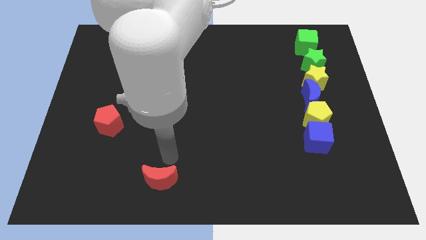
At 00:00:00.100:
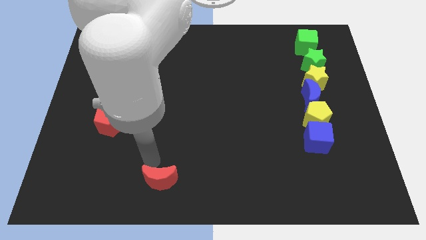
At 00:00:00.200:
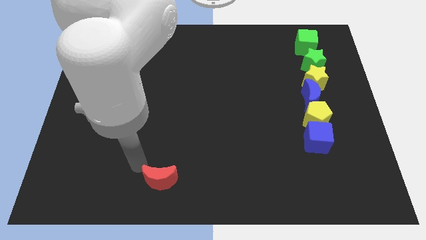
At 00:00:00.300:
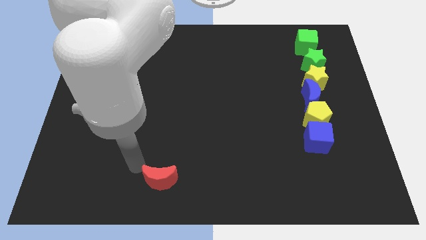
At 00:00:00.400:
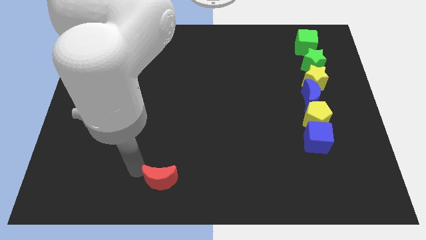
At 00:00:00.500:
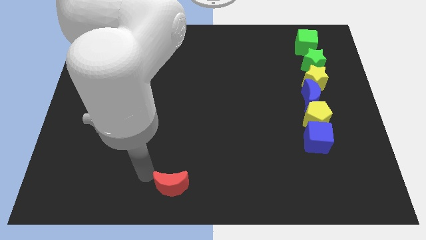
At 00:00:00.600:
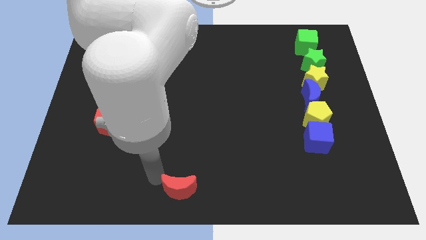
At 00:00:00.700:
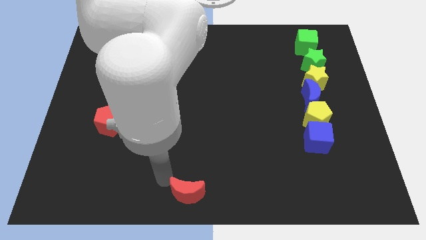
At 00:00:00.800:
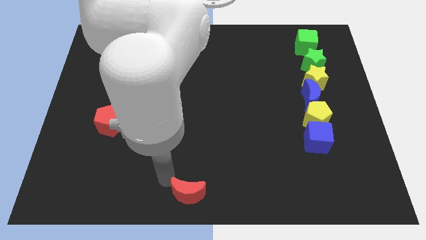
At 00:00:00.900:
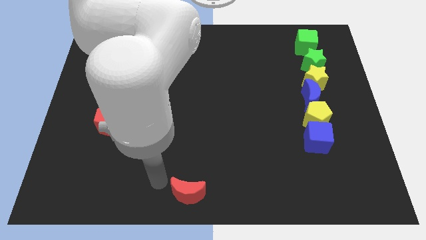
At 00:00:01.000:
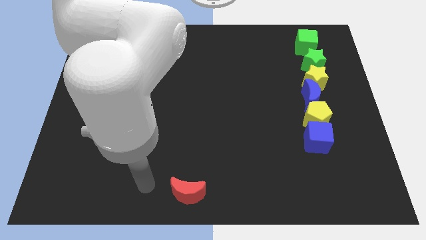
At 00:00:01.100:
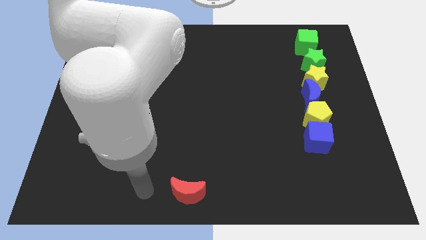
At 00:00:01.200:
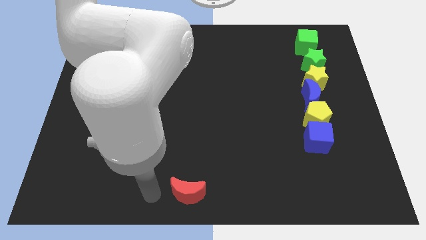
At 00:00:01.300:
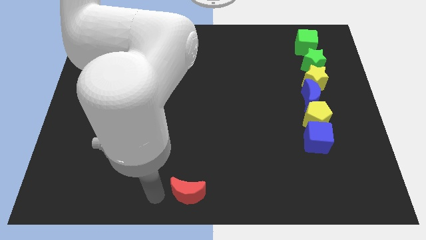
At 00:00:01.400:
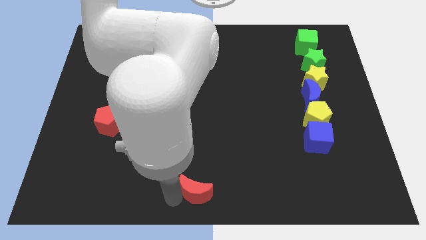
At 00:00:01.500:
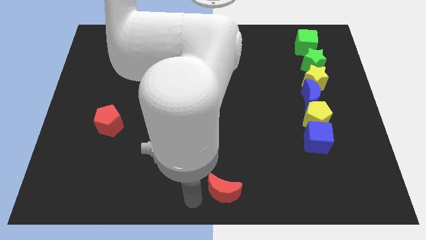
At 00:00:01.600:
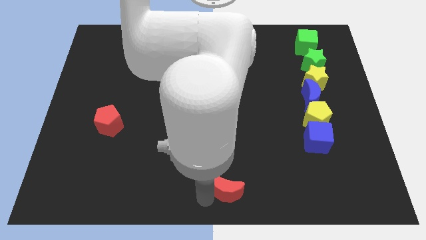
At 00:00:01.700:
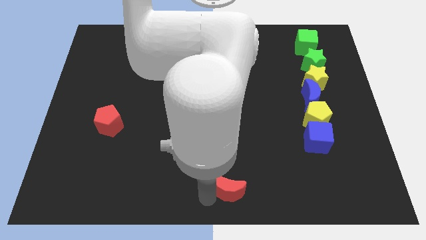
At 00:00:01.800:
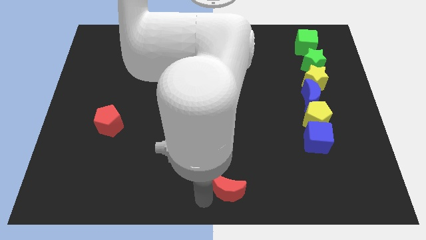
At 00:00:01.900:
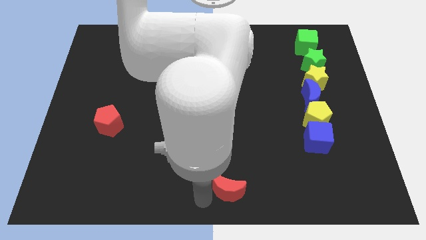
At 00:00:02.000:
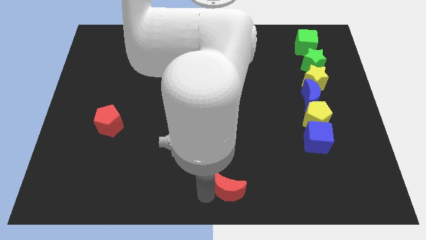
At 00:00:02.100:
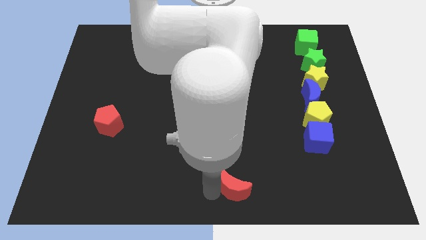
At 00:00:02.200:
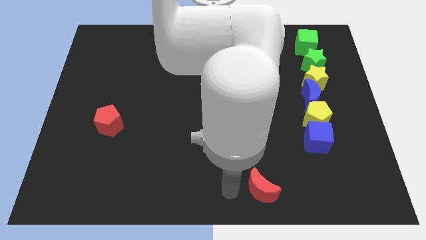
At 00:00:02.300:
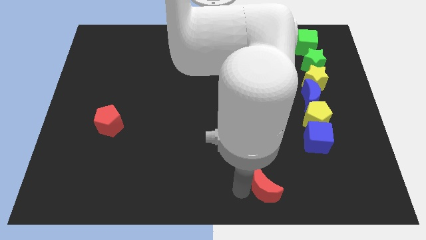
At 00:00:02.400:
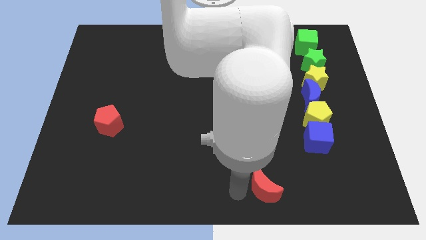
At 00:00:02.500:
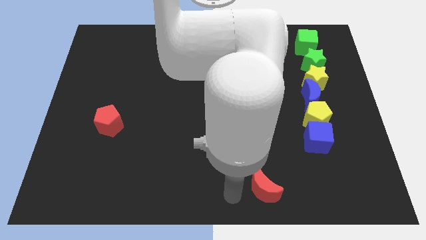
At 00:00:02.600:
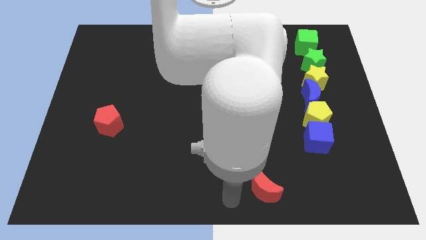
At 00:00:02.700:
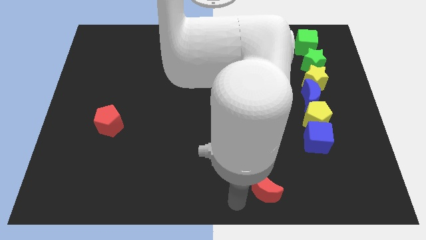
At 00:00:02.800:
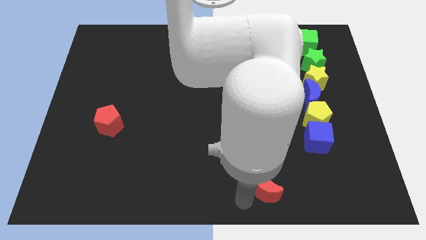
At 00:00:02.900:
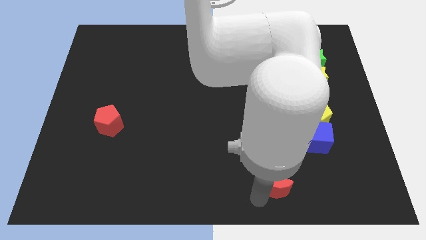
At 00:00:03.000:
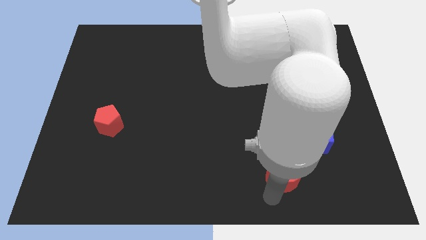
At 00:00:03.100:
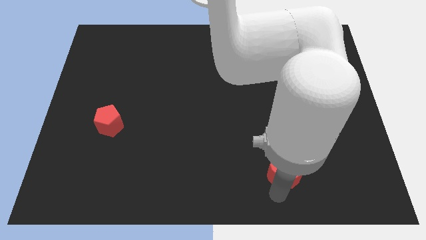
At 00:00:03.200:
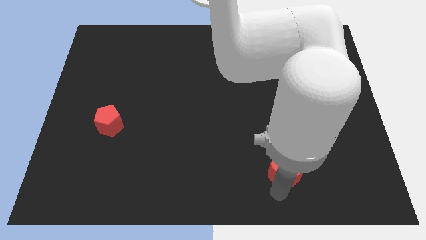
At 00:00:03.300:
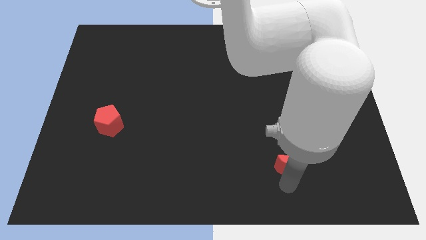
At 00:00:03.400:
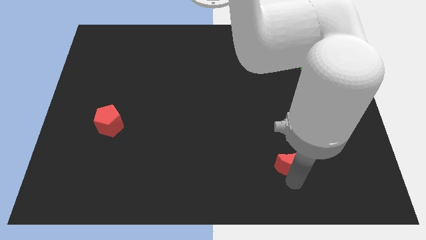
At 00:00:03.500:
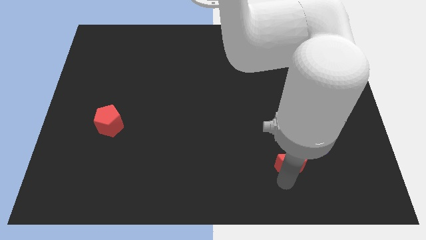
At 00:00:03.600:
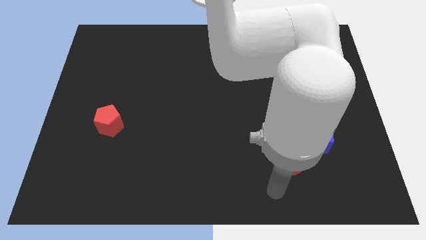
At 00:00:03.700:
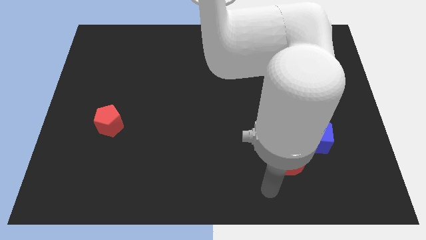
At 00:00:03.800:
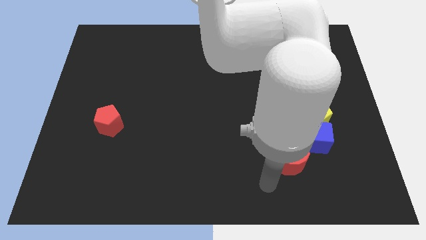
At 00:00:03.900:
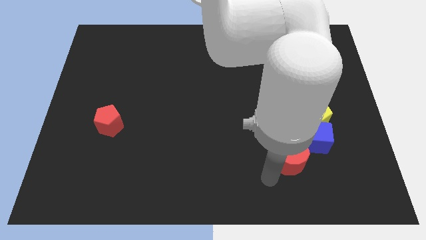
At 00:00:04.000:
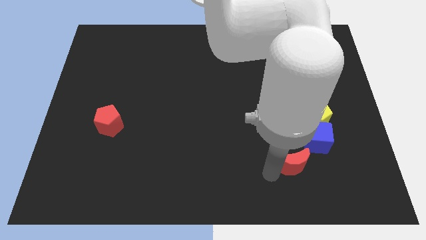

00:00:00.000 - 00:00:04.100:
move the red crescent at the bottom left of the blue cube

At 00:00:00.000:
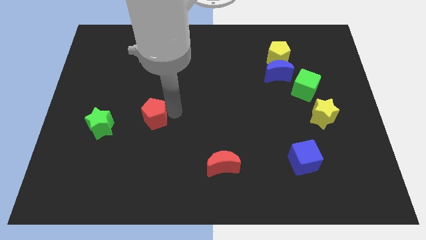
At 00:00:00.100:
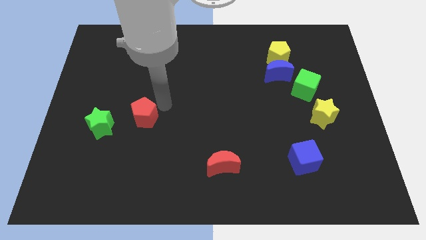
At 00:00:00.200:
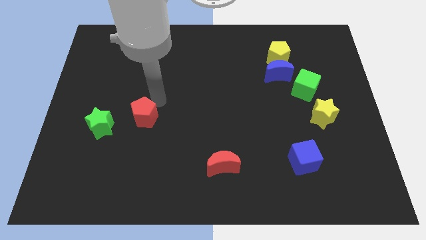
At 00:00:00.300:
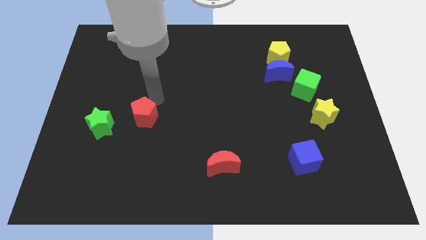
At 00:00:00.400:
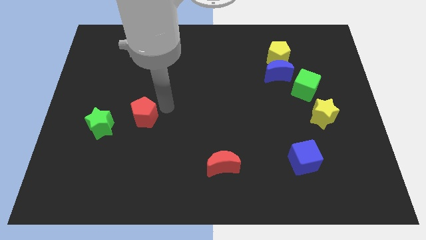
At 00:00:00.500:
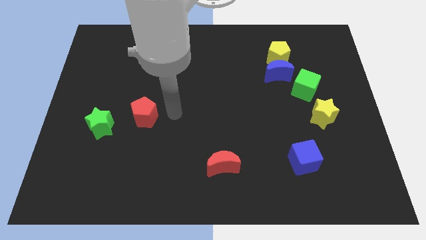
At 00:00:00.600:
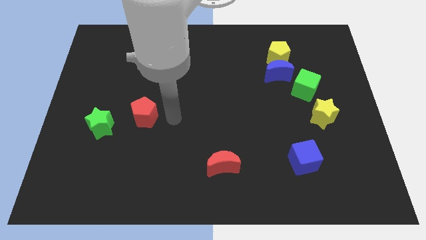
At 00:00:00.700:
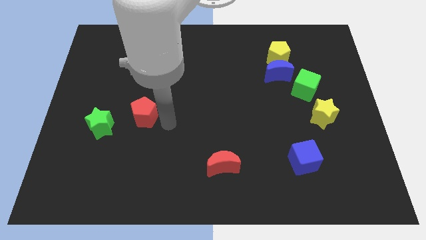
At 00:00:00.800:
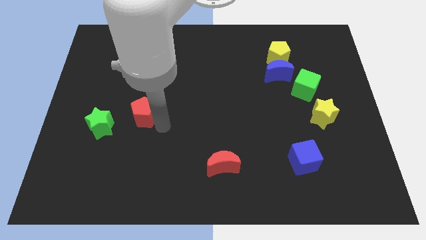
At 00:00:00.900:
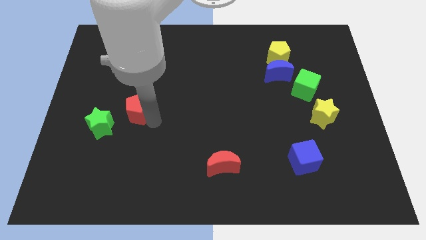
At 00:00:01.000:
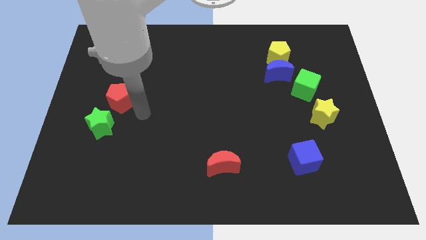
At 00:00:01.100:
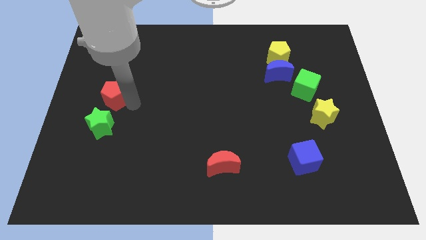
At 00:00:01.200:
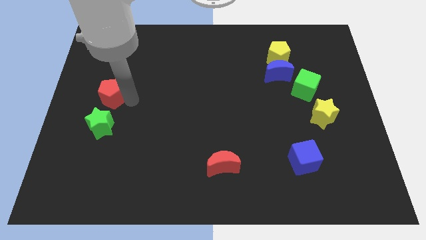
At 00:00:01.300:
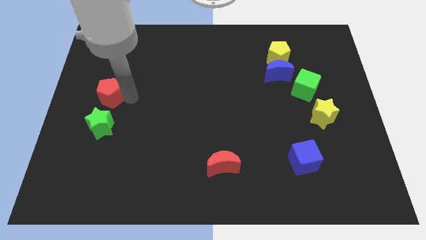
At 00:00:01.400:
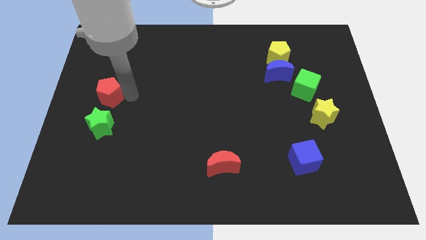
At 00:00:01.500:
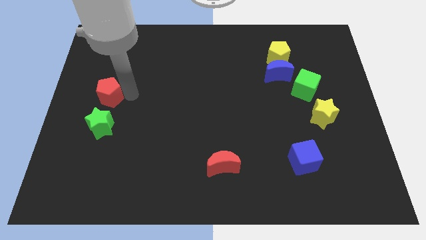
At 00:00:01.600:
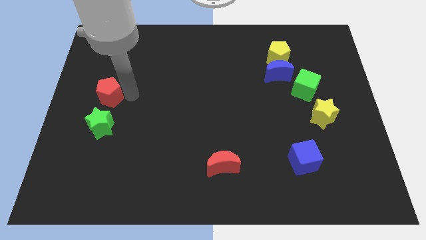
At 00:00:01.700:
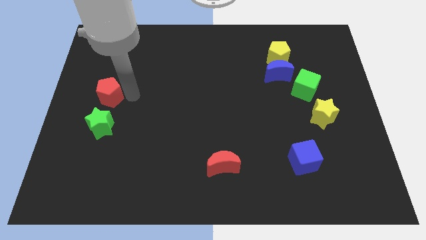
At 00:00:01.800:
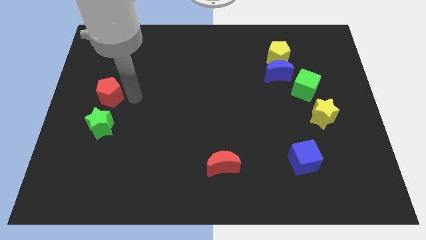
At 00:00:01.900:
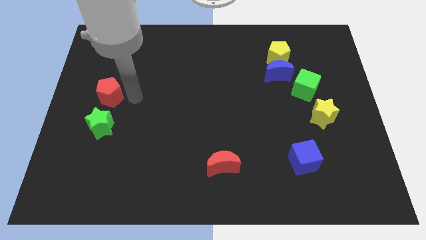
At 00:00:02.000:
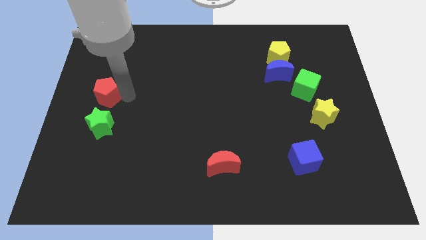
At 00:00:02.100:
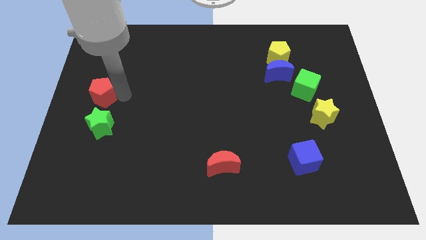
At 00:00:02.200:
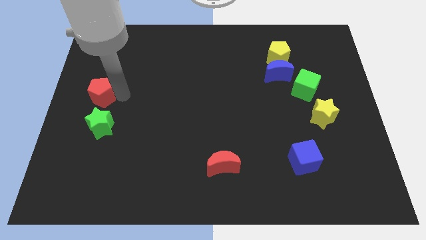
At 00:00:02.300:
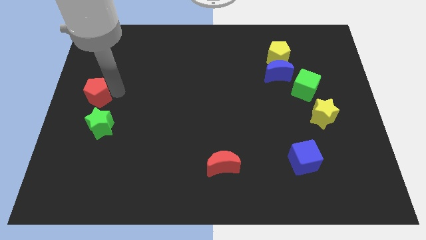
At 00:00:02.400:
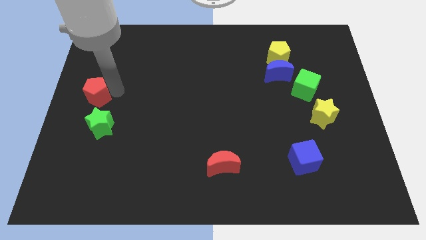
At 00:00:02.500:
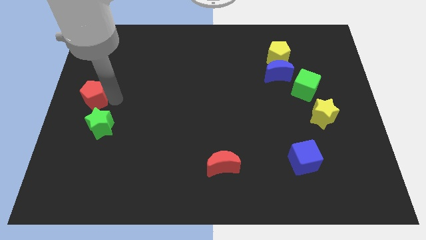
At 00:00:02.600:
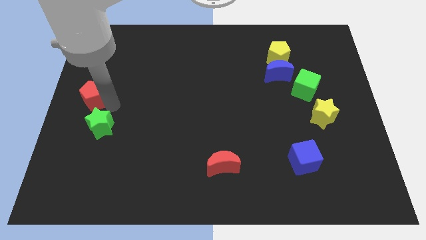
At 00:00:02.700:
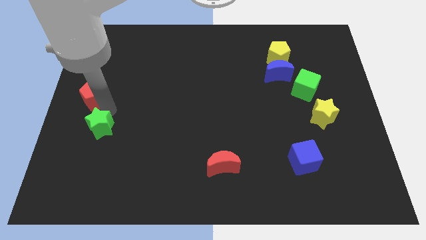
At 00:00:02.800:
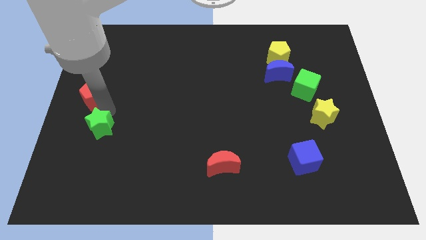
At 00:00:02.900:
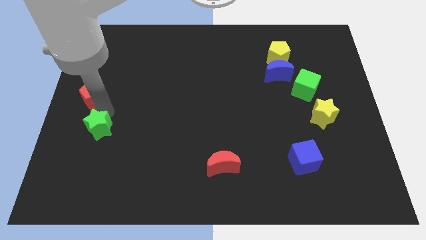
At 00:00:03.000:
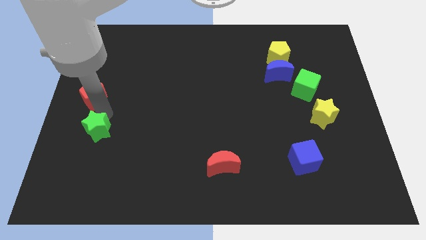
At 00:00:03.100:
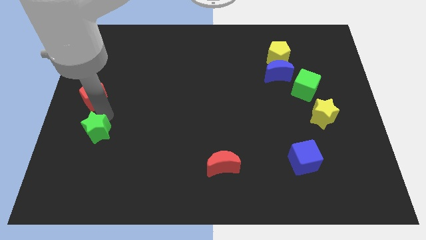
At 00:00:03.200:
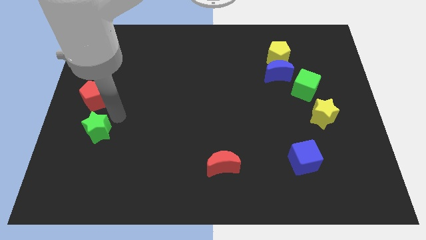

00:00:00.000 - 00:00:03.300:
put the red pentagon vertically above the green star

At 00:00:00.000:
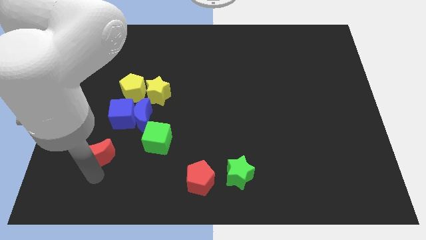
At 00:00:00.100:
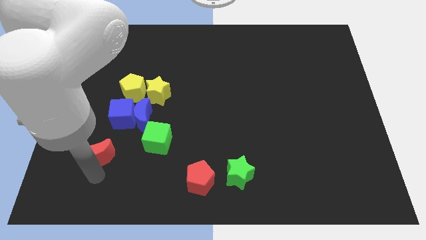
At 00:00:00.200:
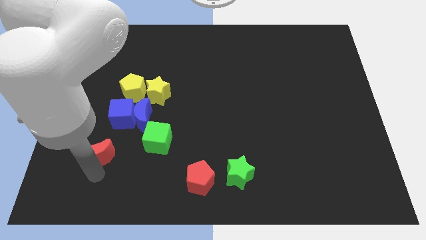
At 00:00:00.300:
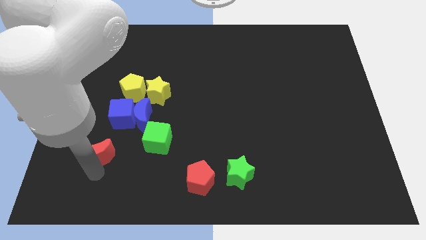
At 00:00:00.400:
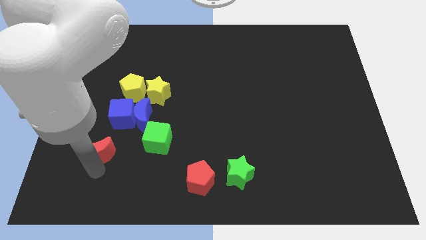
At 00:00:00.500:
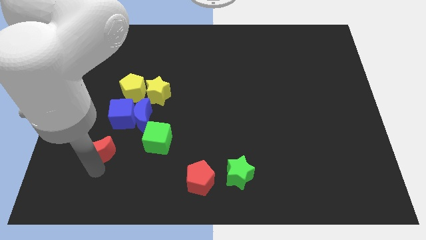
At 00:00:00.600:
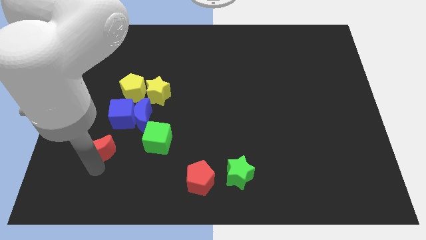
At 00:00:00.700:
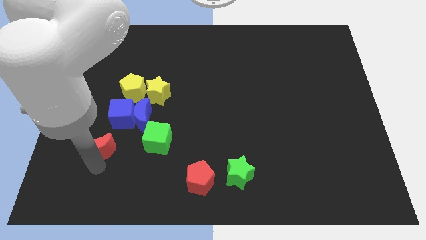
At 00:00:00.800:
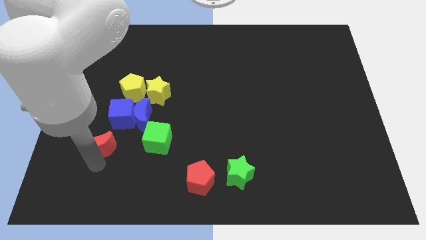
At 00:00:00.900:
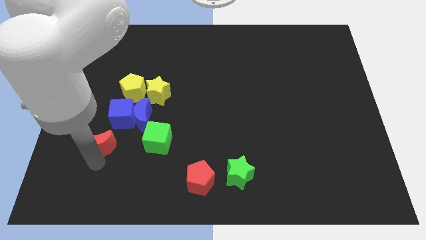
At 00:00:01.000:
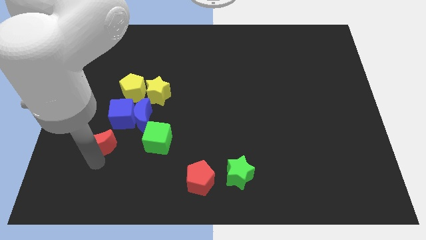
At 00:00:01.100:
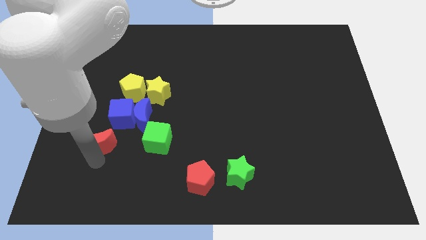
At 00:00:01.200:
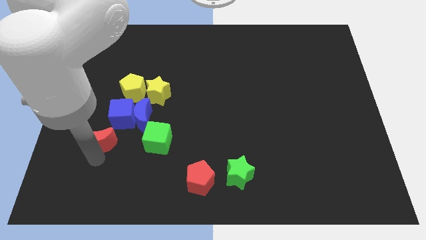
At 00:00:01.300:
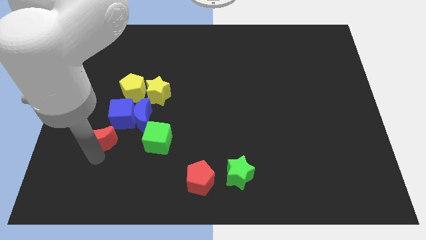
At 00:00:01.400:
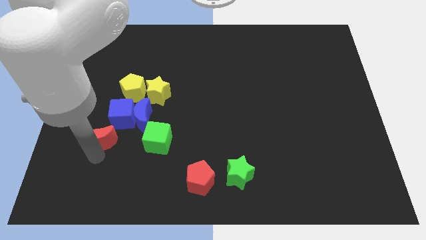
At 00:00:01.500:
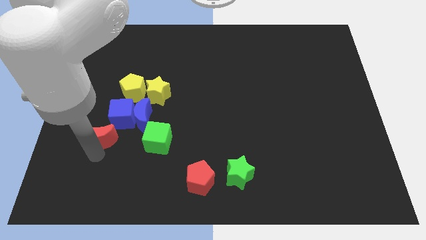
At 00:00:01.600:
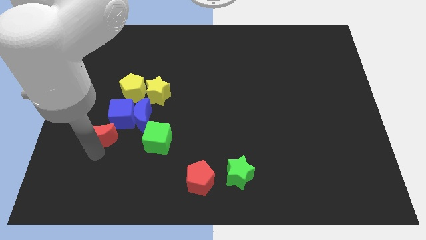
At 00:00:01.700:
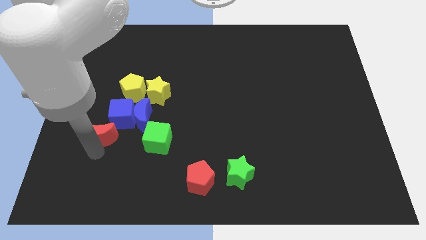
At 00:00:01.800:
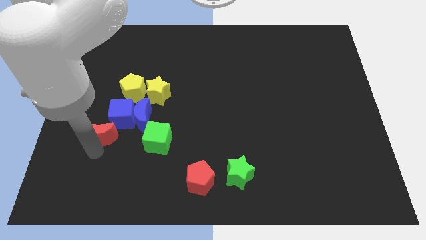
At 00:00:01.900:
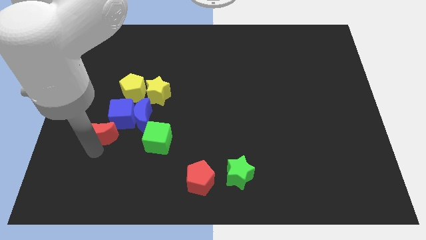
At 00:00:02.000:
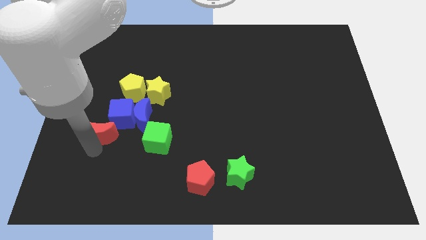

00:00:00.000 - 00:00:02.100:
push the red crescent towards the blue cube
